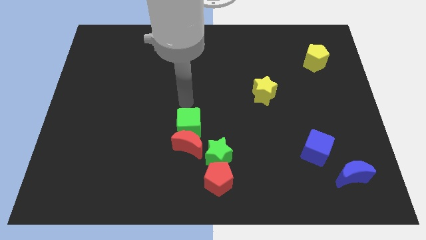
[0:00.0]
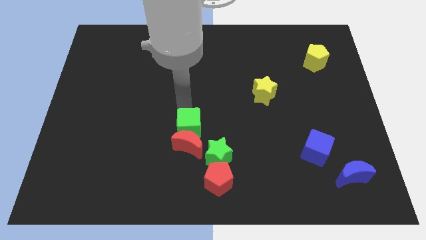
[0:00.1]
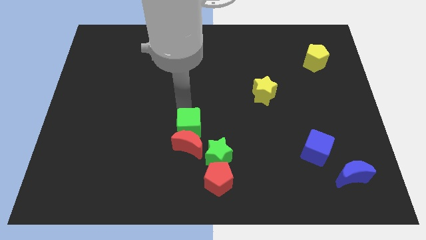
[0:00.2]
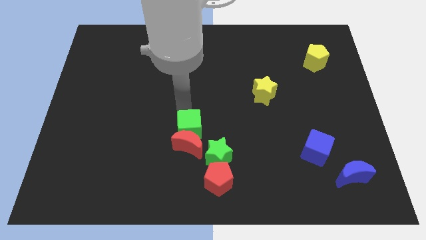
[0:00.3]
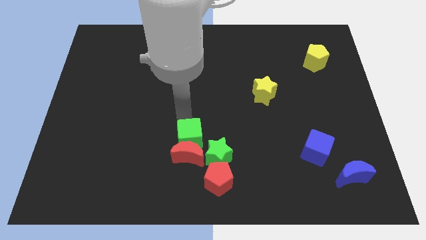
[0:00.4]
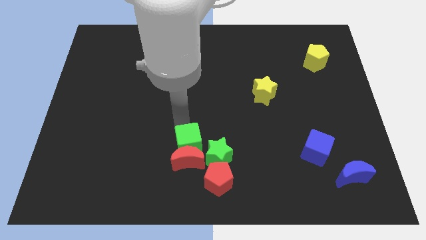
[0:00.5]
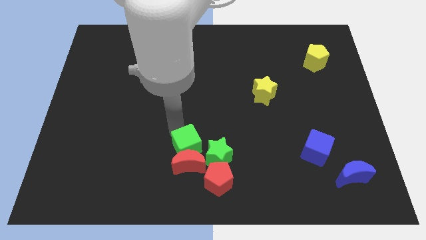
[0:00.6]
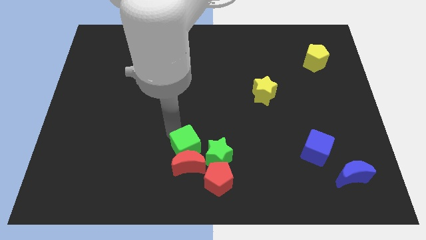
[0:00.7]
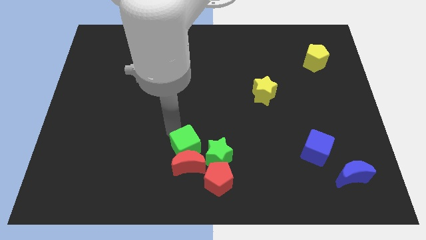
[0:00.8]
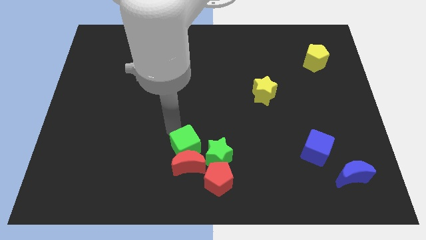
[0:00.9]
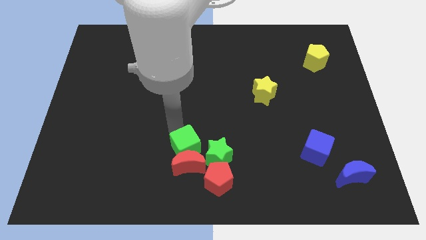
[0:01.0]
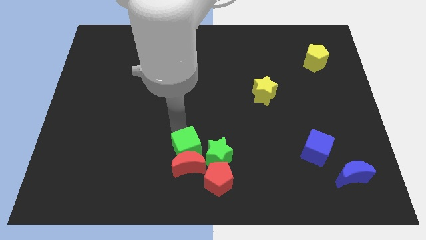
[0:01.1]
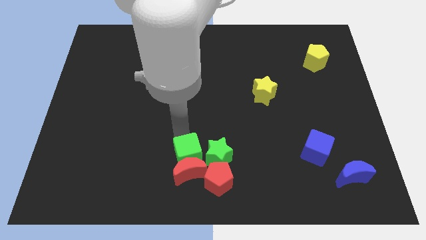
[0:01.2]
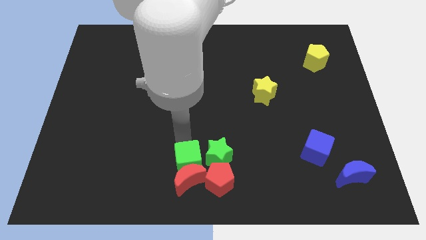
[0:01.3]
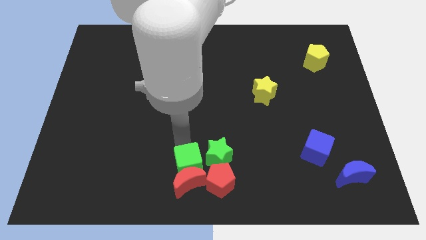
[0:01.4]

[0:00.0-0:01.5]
push the green cube with the red crescent into the red pentagon

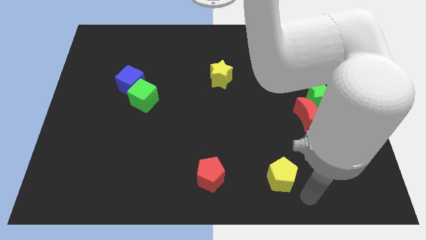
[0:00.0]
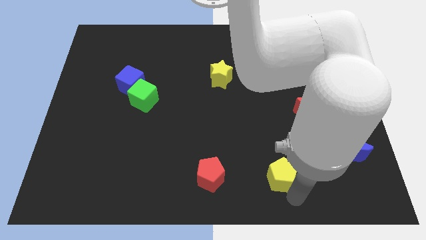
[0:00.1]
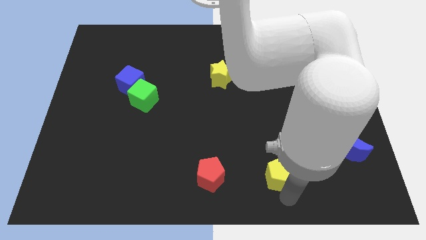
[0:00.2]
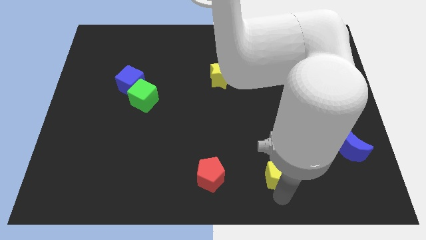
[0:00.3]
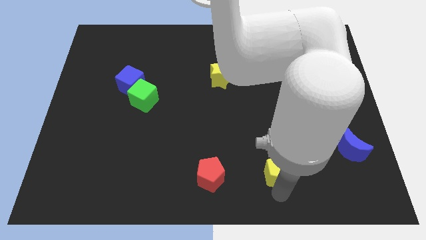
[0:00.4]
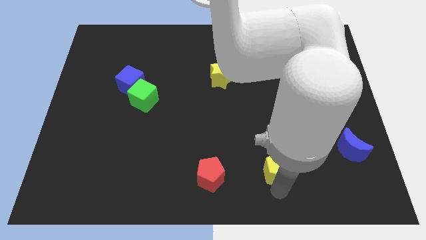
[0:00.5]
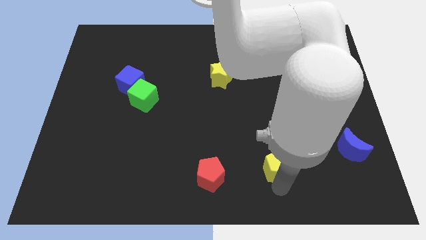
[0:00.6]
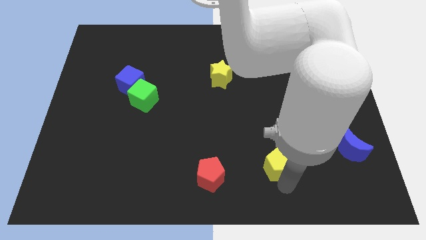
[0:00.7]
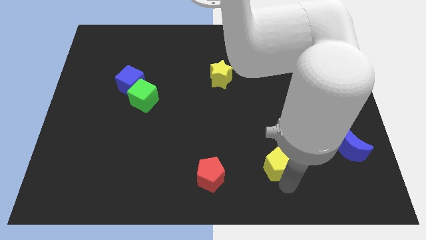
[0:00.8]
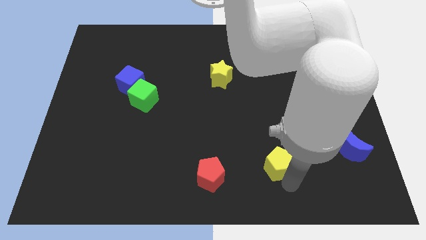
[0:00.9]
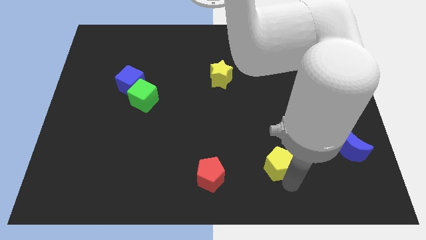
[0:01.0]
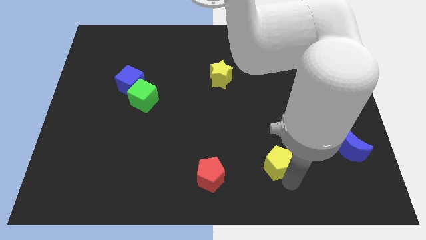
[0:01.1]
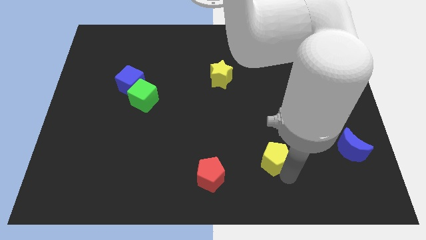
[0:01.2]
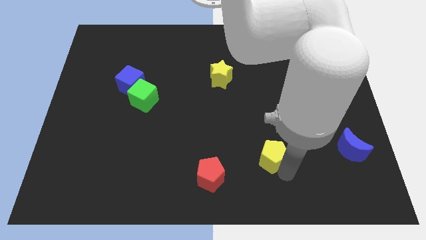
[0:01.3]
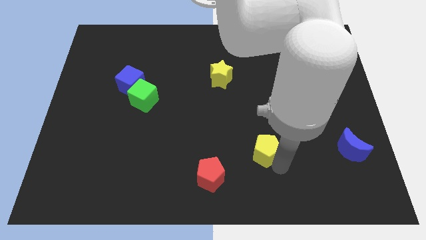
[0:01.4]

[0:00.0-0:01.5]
push the yellow pentagon slightly upwards

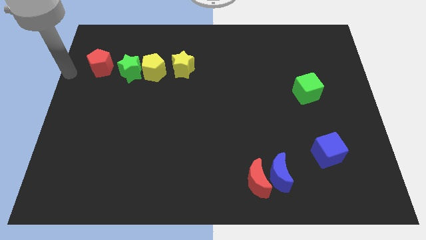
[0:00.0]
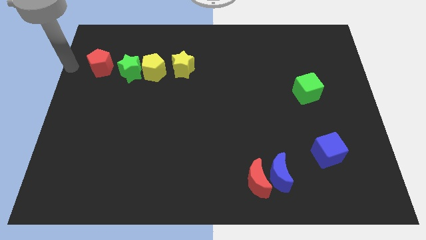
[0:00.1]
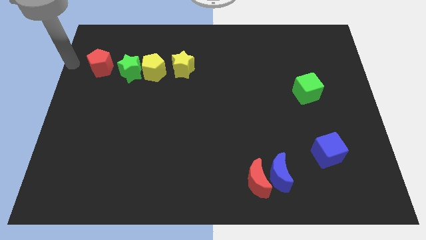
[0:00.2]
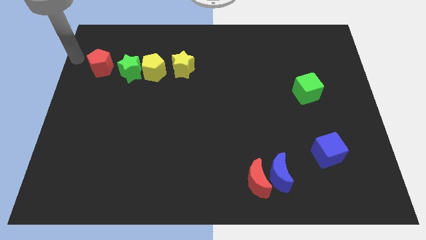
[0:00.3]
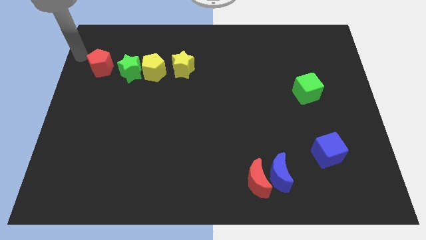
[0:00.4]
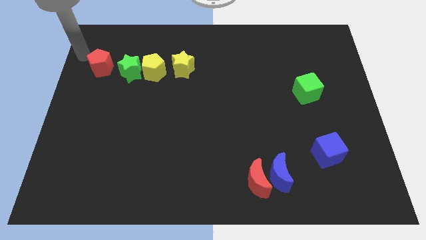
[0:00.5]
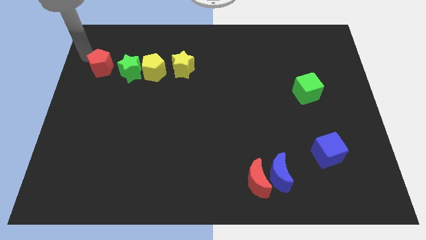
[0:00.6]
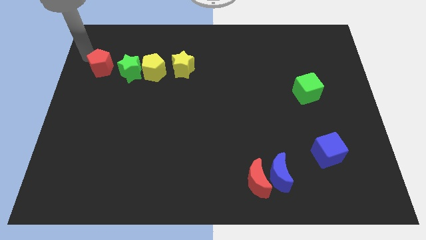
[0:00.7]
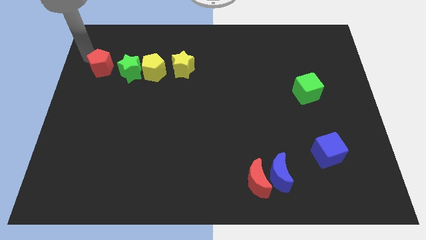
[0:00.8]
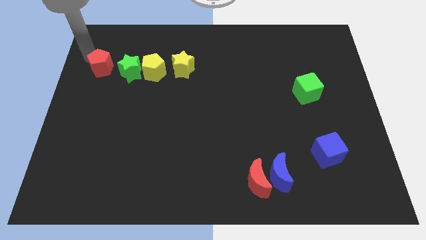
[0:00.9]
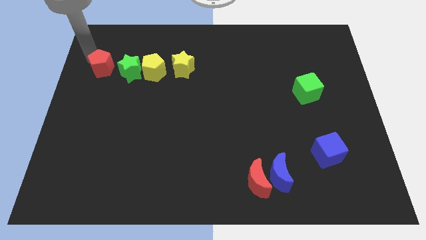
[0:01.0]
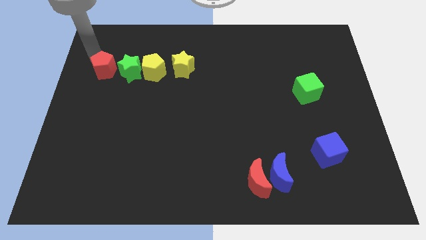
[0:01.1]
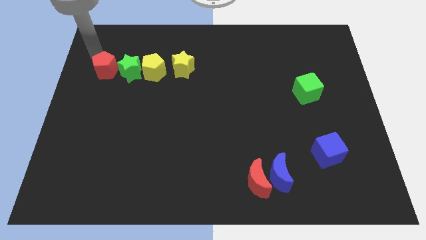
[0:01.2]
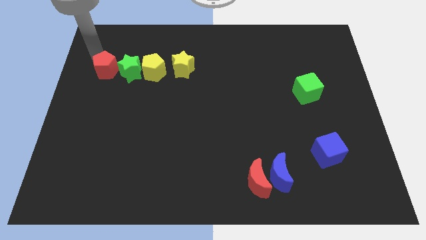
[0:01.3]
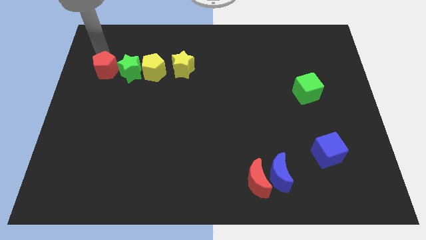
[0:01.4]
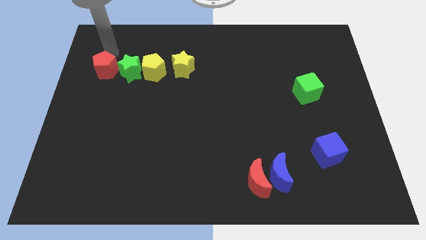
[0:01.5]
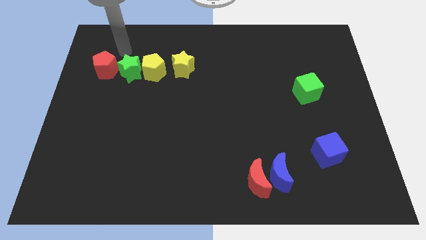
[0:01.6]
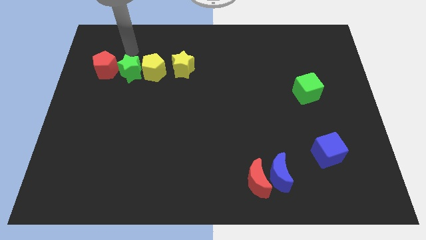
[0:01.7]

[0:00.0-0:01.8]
push the red pentagon slightly towards down

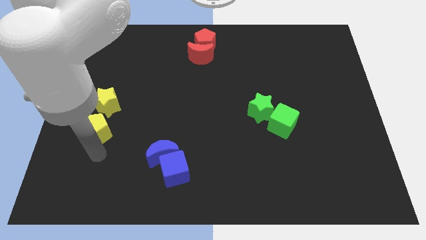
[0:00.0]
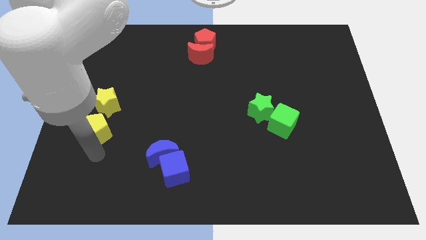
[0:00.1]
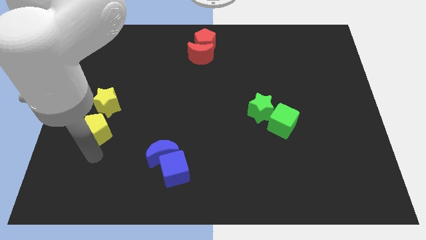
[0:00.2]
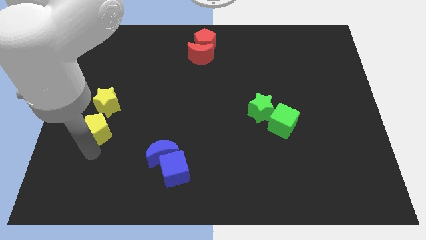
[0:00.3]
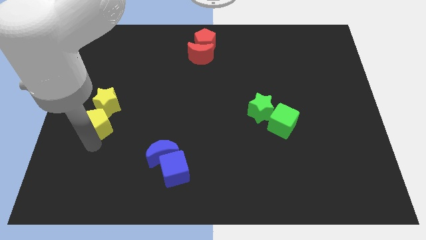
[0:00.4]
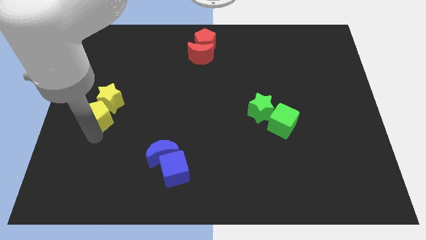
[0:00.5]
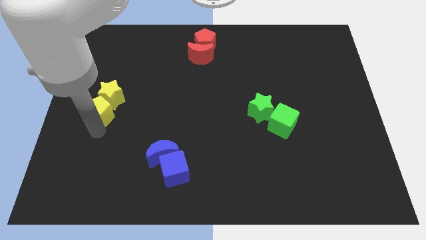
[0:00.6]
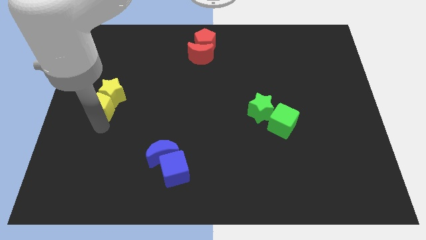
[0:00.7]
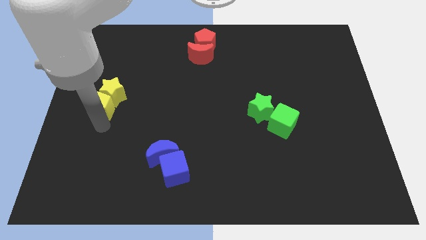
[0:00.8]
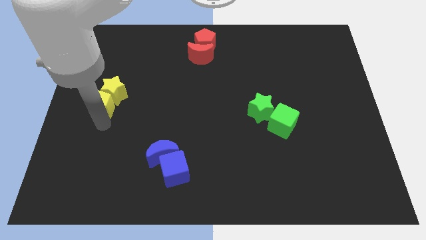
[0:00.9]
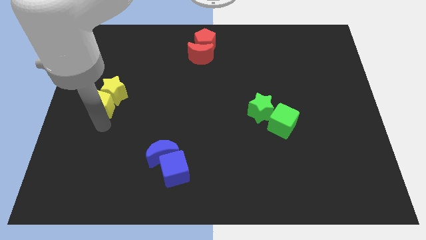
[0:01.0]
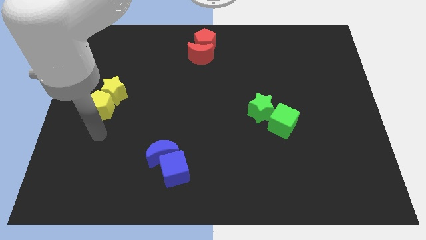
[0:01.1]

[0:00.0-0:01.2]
move yellow pentagon into yellow star

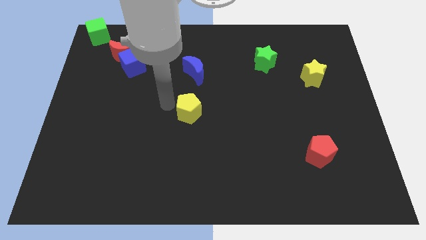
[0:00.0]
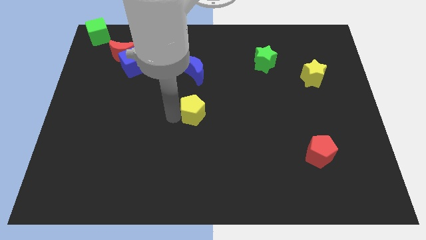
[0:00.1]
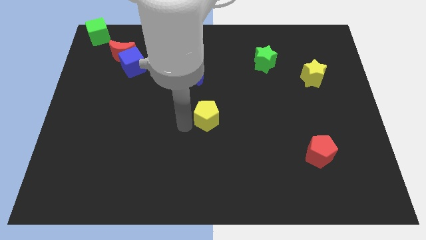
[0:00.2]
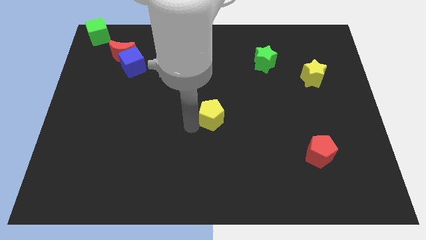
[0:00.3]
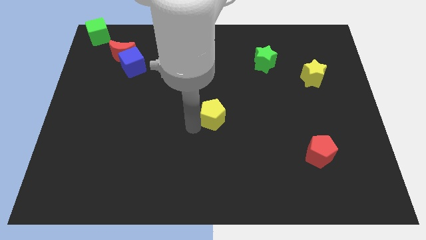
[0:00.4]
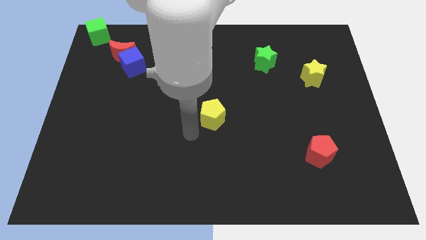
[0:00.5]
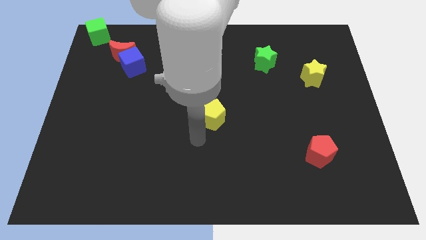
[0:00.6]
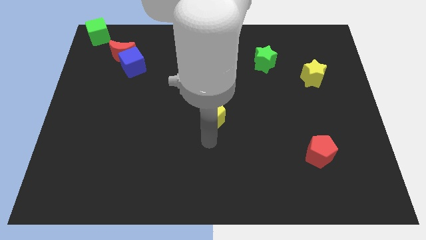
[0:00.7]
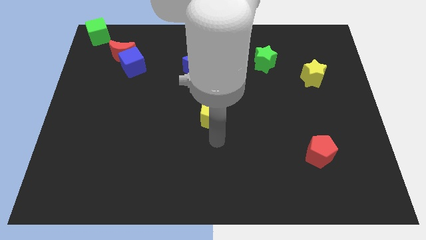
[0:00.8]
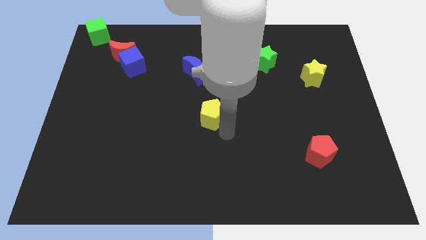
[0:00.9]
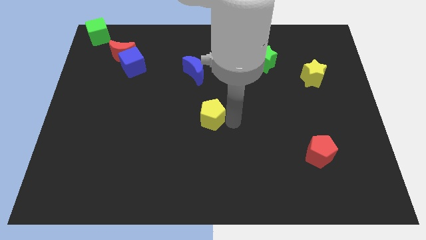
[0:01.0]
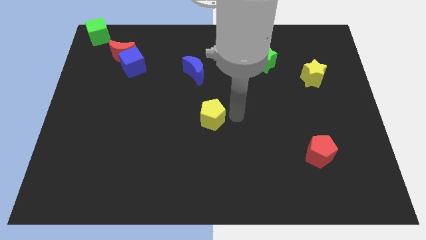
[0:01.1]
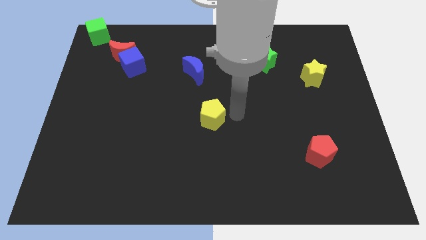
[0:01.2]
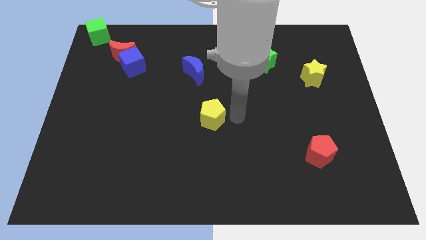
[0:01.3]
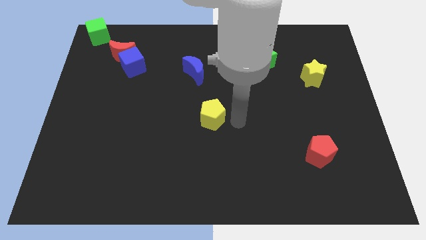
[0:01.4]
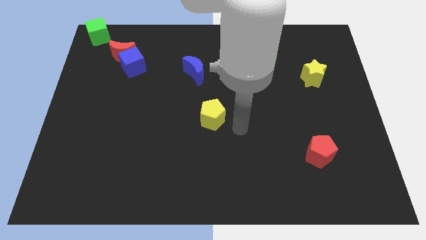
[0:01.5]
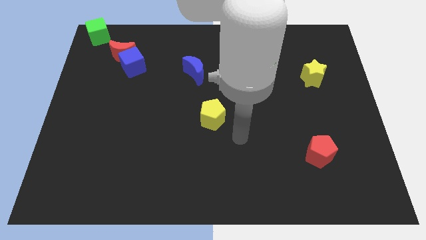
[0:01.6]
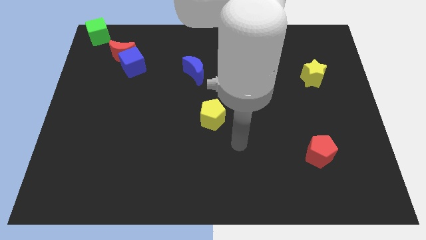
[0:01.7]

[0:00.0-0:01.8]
push the yellow pentagon into center of the board

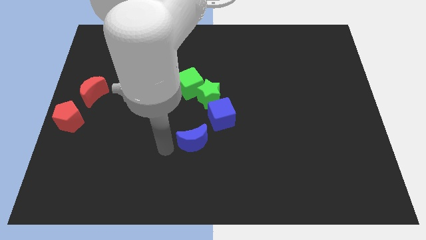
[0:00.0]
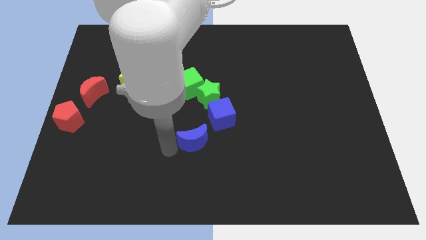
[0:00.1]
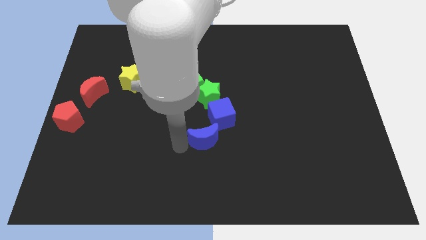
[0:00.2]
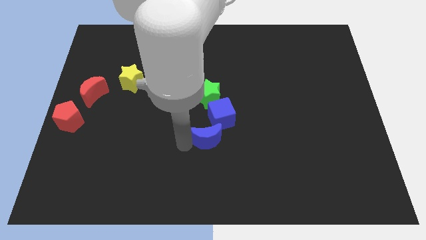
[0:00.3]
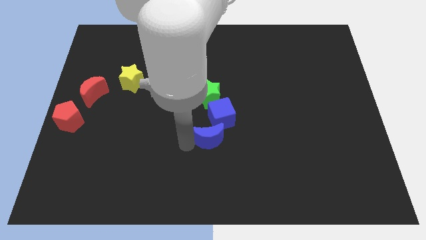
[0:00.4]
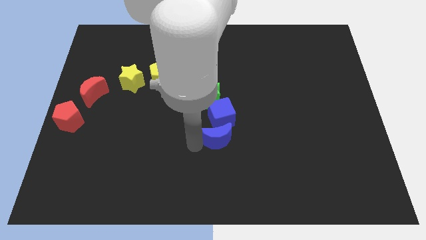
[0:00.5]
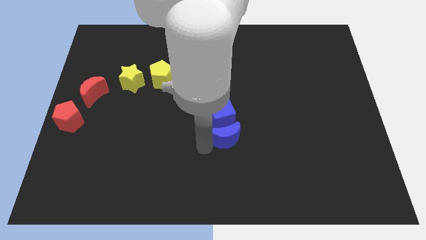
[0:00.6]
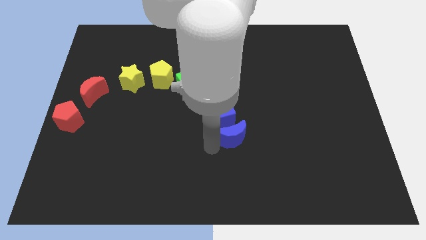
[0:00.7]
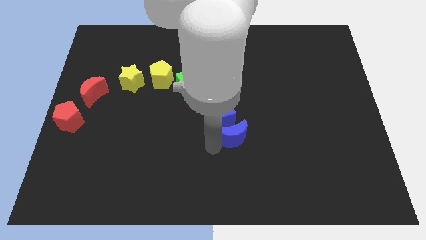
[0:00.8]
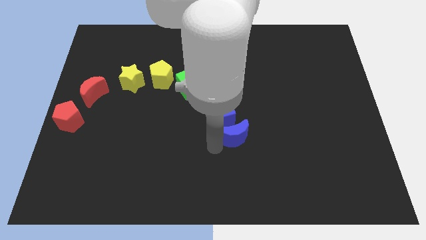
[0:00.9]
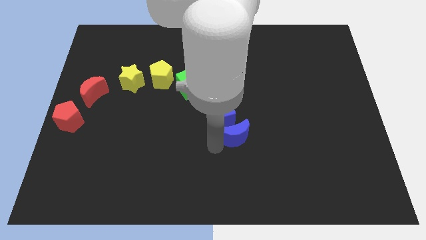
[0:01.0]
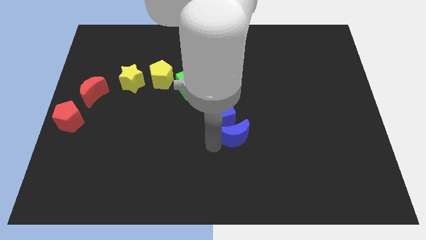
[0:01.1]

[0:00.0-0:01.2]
place the blue moon below the blue cube
